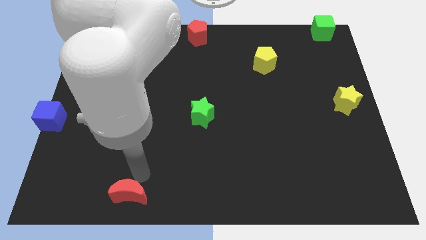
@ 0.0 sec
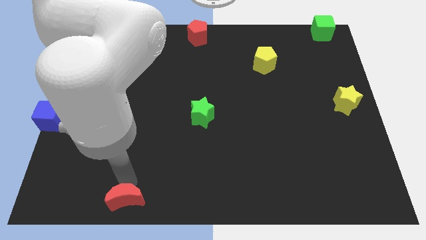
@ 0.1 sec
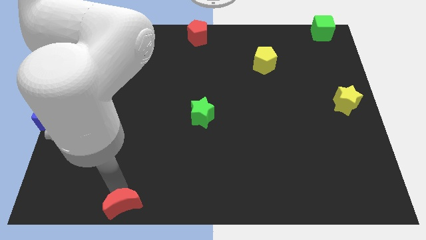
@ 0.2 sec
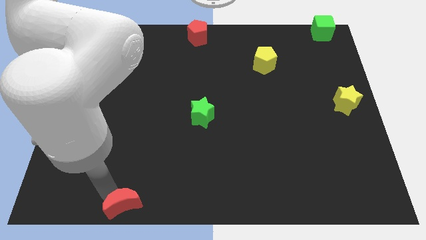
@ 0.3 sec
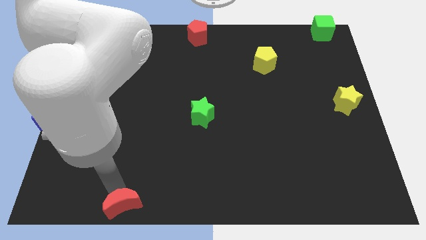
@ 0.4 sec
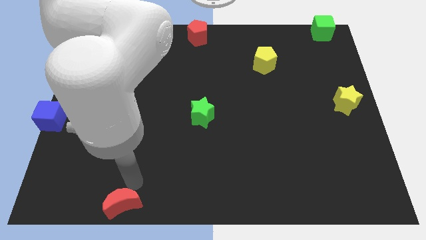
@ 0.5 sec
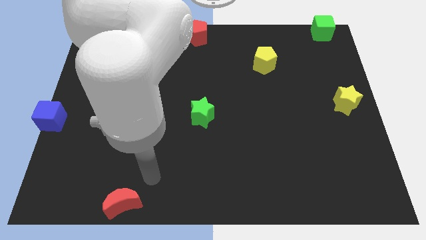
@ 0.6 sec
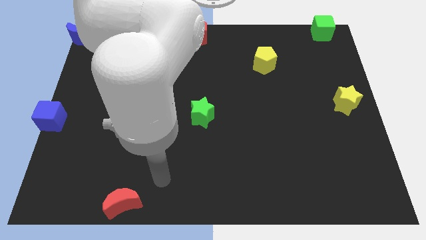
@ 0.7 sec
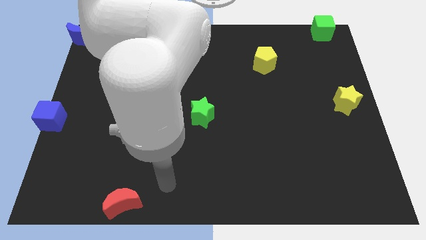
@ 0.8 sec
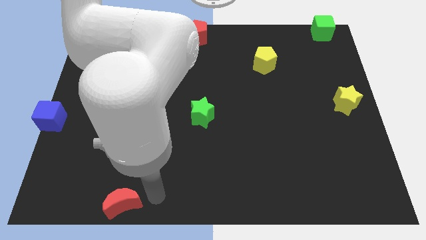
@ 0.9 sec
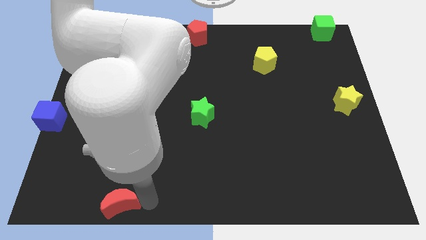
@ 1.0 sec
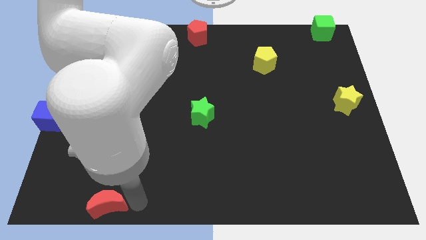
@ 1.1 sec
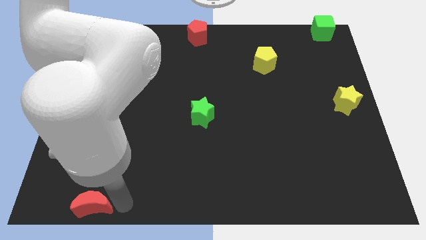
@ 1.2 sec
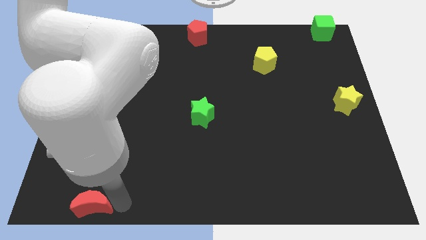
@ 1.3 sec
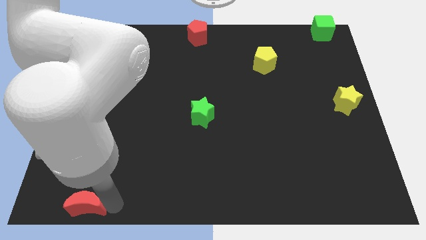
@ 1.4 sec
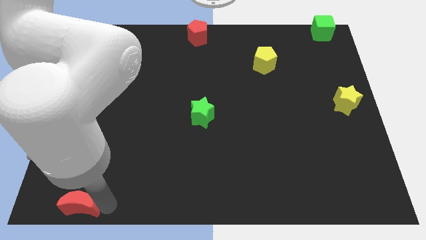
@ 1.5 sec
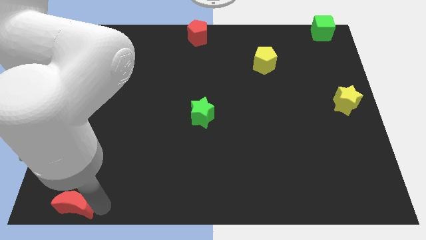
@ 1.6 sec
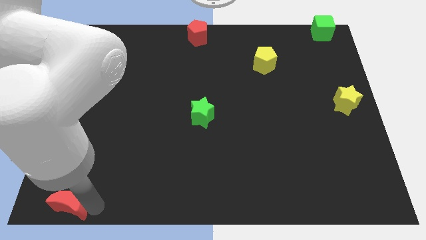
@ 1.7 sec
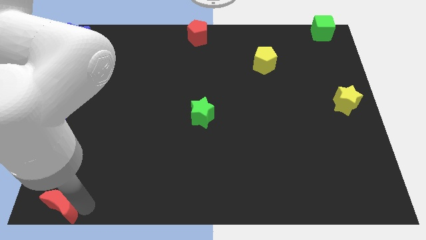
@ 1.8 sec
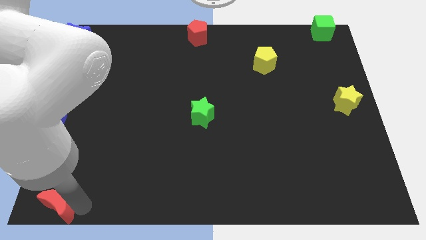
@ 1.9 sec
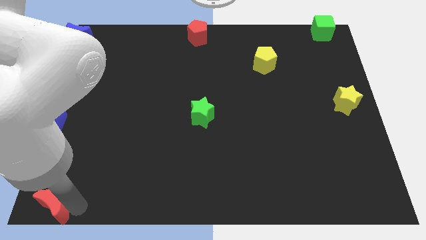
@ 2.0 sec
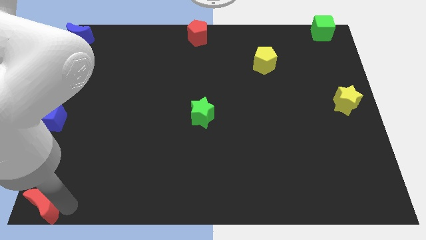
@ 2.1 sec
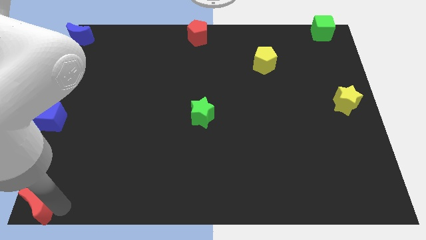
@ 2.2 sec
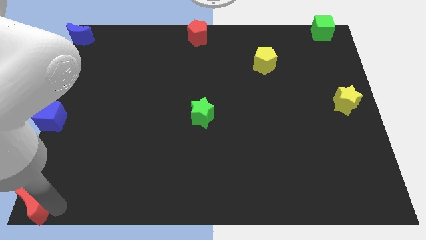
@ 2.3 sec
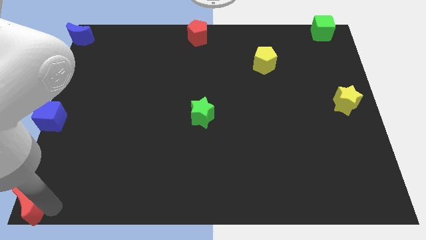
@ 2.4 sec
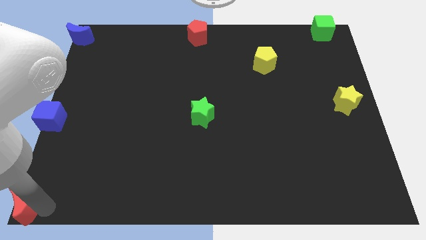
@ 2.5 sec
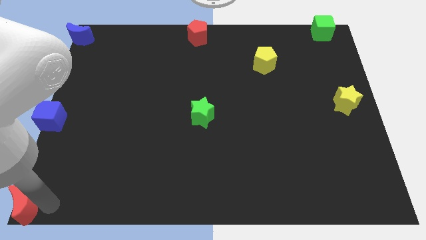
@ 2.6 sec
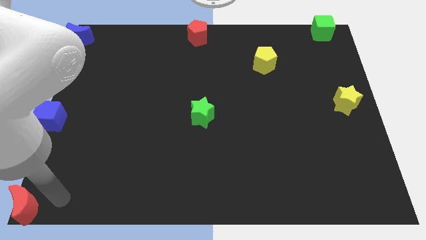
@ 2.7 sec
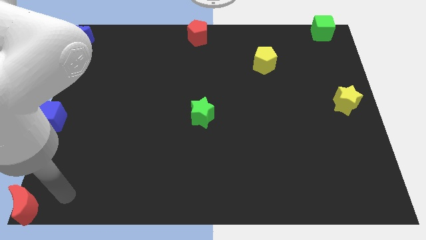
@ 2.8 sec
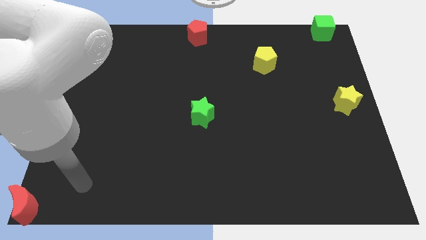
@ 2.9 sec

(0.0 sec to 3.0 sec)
place the red moon to the bottom left of the board

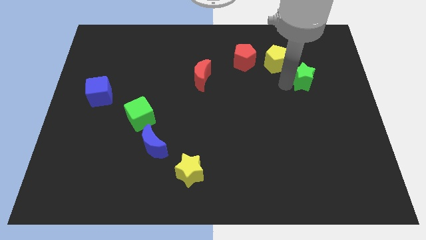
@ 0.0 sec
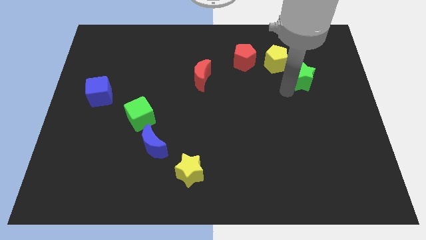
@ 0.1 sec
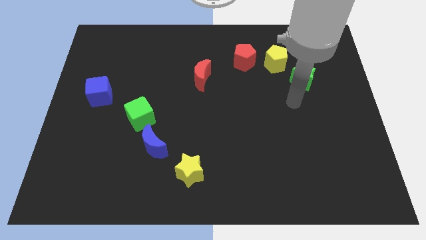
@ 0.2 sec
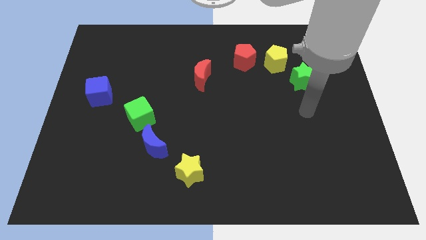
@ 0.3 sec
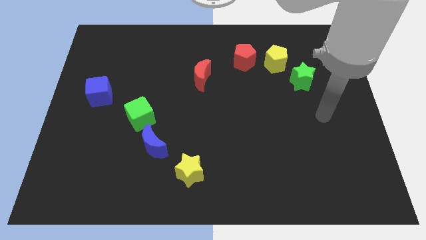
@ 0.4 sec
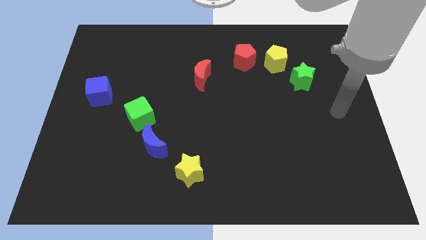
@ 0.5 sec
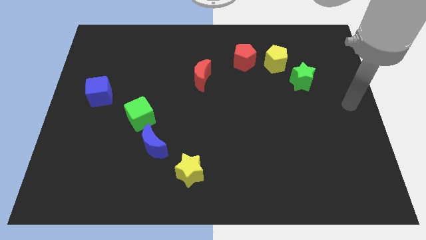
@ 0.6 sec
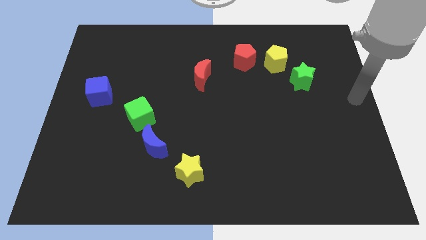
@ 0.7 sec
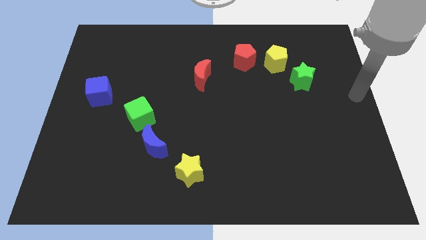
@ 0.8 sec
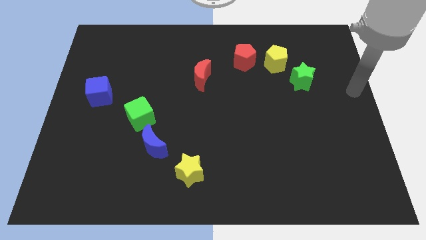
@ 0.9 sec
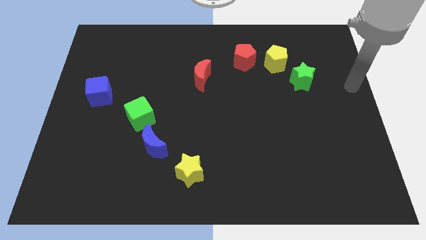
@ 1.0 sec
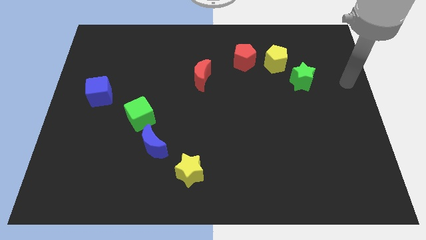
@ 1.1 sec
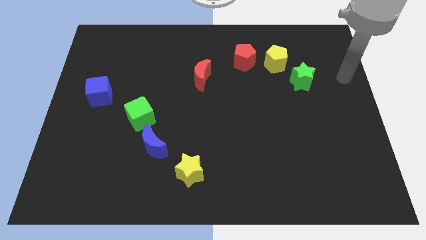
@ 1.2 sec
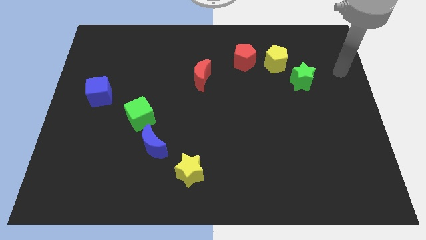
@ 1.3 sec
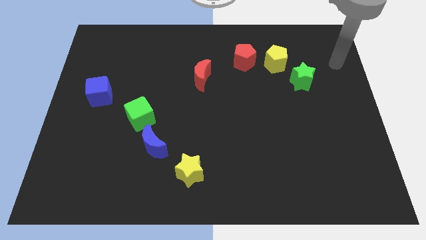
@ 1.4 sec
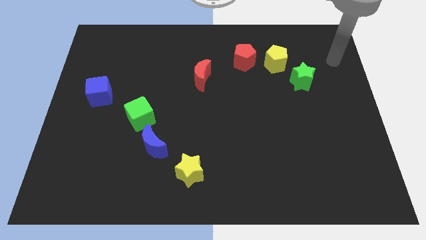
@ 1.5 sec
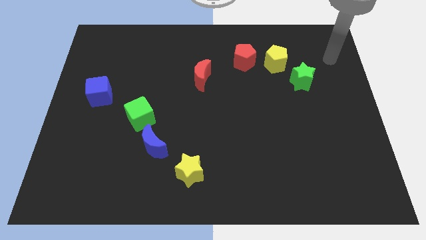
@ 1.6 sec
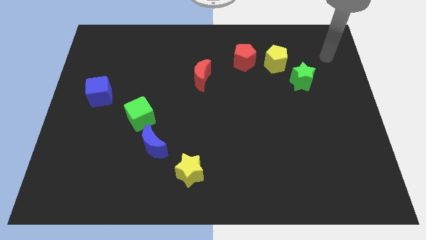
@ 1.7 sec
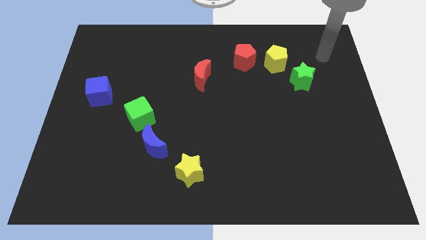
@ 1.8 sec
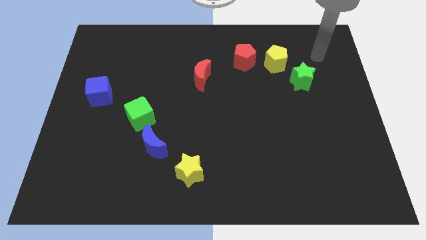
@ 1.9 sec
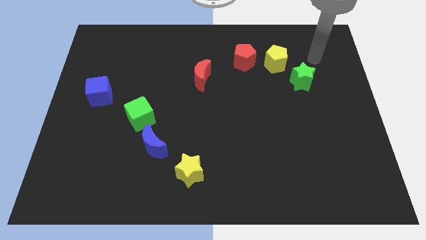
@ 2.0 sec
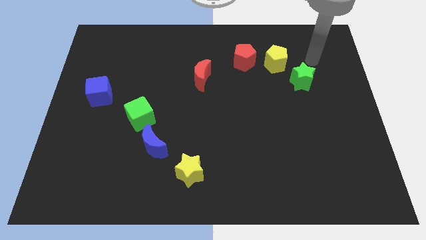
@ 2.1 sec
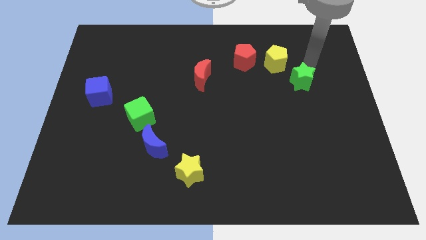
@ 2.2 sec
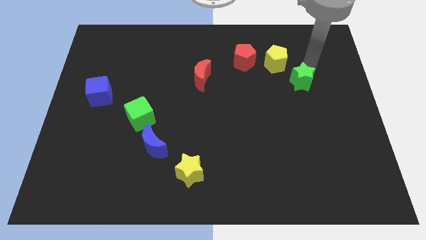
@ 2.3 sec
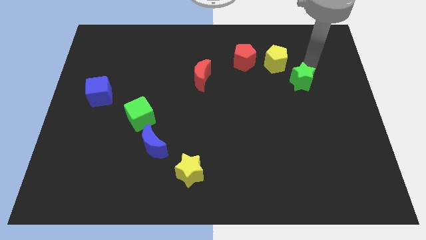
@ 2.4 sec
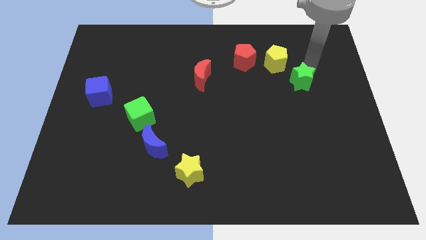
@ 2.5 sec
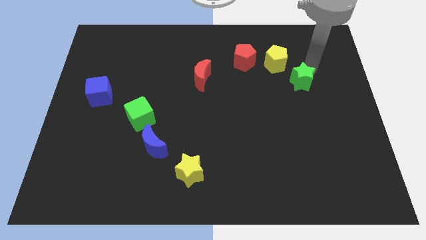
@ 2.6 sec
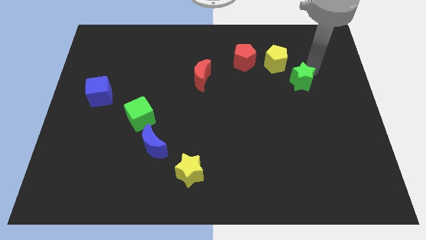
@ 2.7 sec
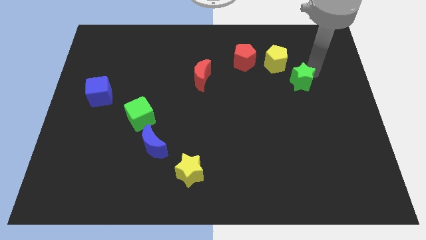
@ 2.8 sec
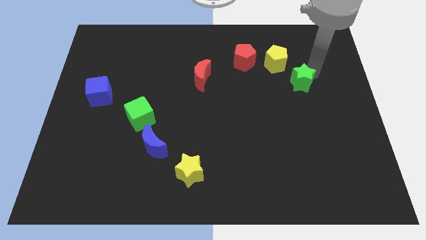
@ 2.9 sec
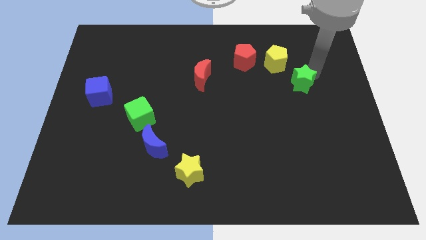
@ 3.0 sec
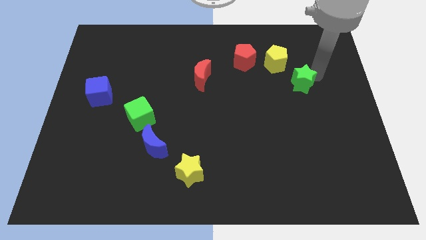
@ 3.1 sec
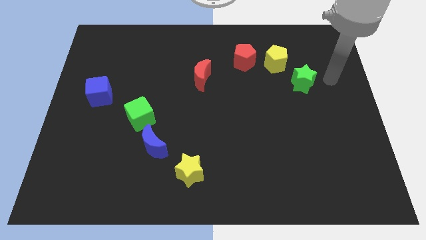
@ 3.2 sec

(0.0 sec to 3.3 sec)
push the green star slightly to the bottom

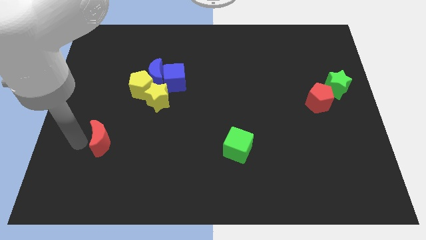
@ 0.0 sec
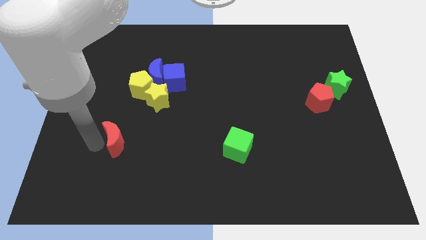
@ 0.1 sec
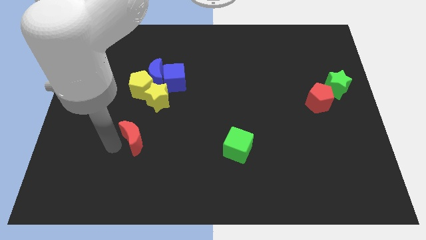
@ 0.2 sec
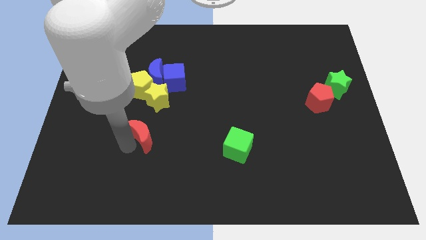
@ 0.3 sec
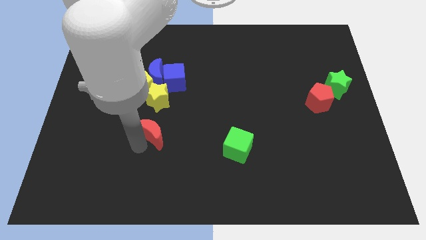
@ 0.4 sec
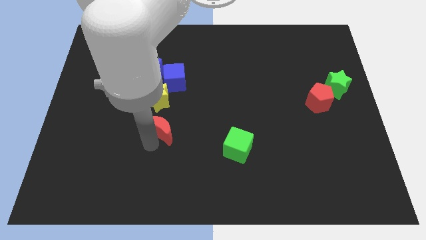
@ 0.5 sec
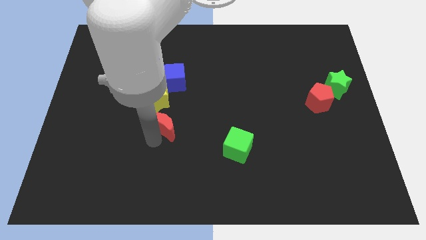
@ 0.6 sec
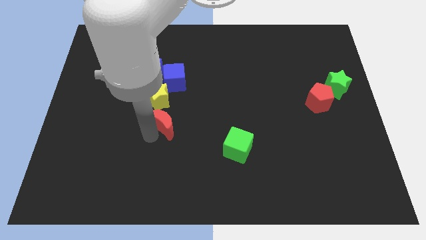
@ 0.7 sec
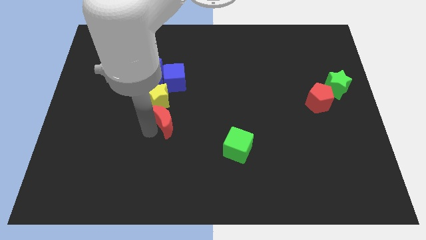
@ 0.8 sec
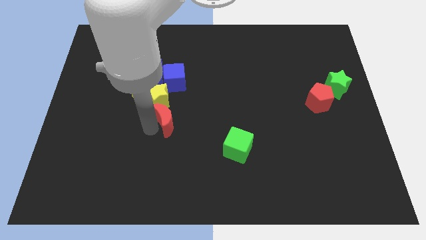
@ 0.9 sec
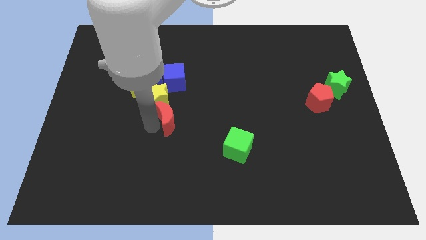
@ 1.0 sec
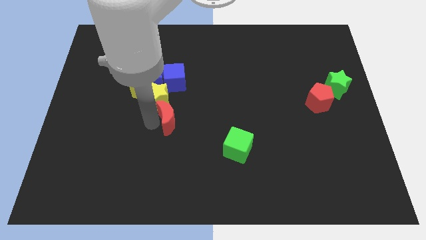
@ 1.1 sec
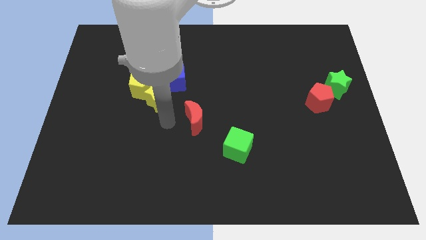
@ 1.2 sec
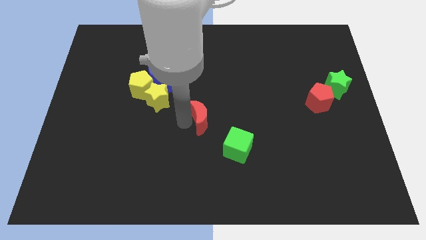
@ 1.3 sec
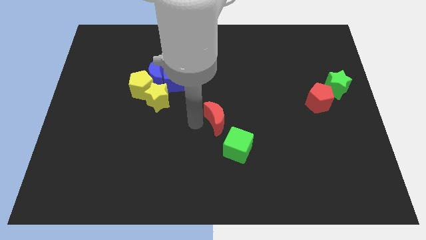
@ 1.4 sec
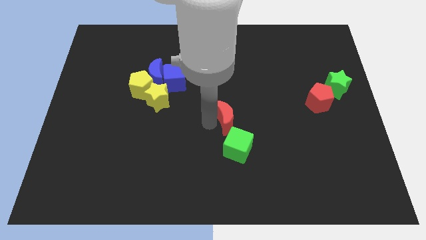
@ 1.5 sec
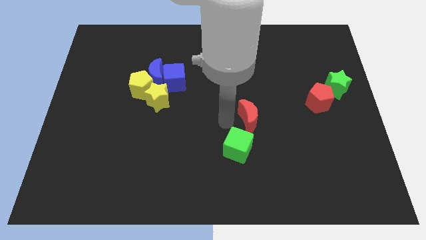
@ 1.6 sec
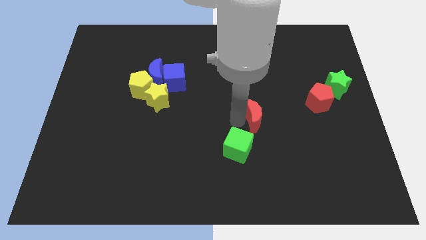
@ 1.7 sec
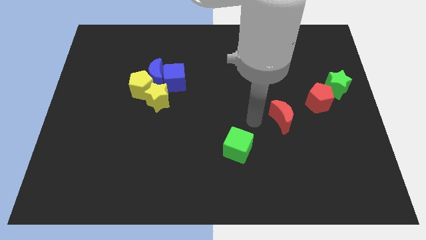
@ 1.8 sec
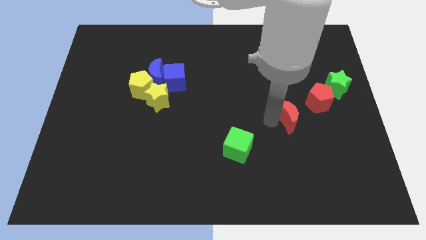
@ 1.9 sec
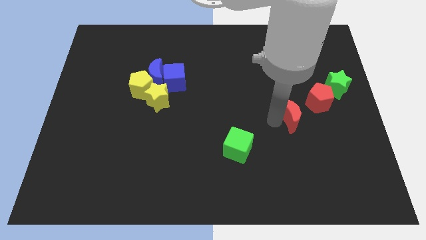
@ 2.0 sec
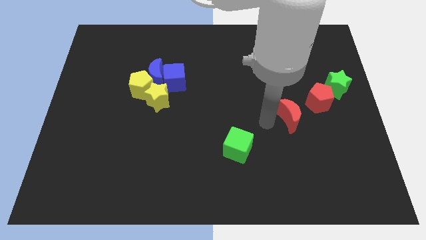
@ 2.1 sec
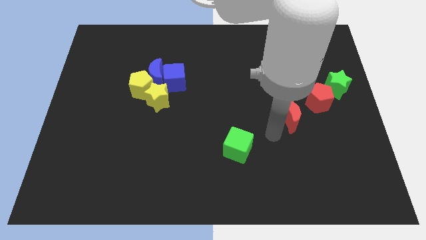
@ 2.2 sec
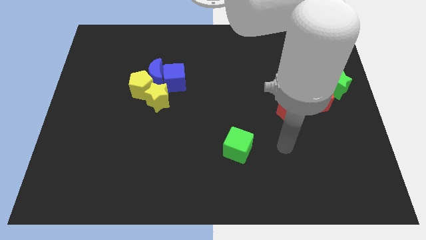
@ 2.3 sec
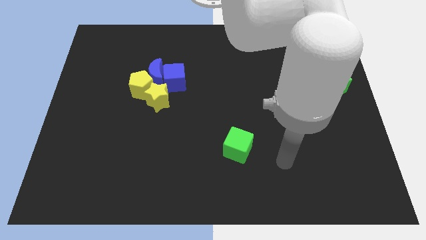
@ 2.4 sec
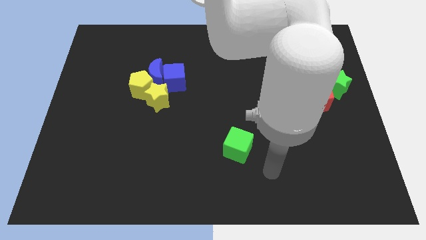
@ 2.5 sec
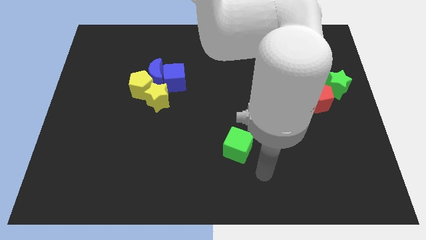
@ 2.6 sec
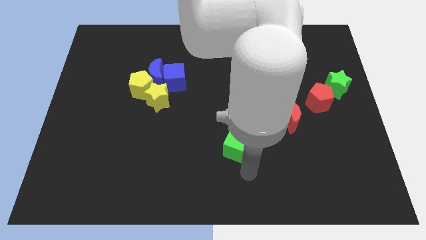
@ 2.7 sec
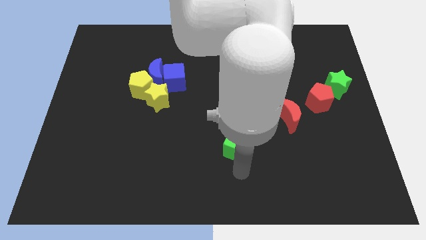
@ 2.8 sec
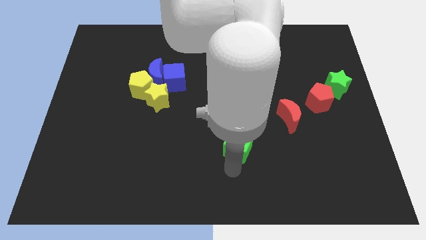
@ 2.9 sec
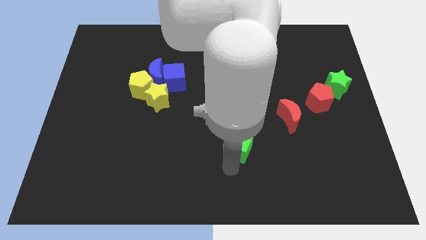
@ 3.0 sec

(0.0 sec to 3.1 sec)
place red crescent left to the red pentagon
